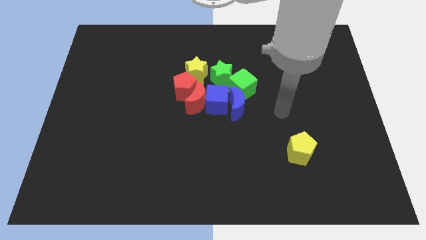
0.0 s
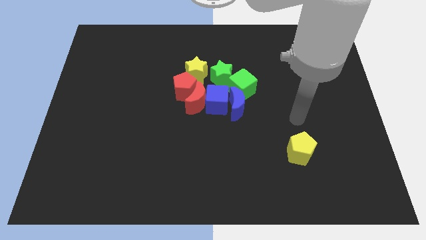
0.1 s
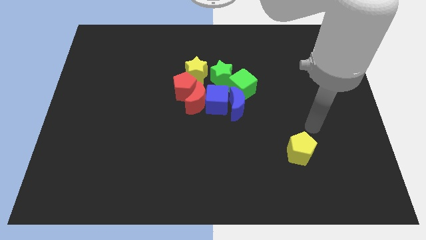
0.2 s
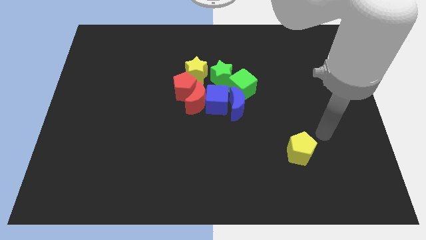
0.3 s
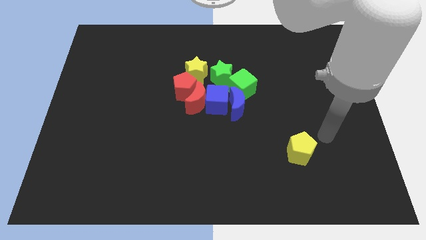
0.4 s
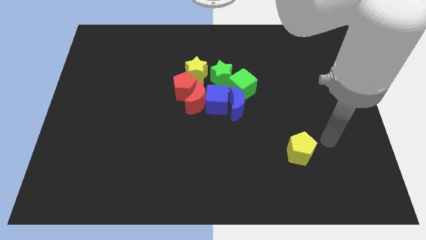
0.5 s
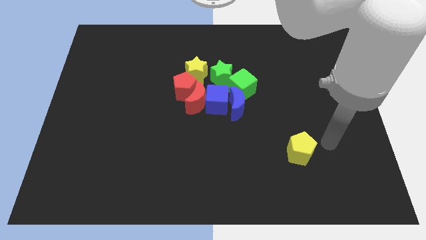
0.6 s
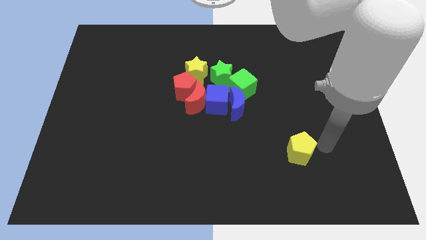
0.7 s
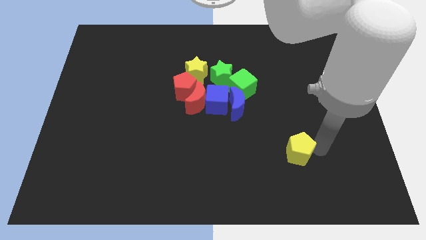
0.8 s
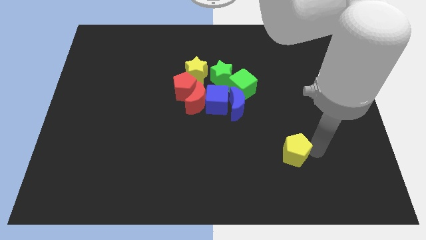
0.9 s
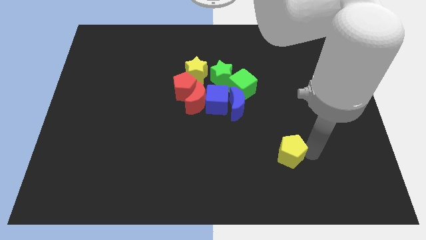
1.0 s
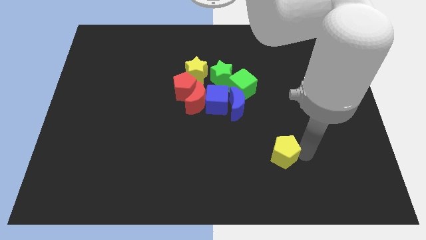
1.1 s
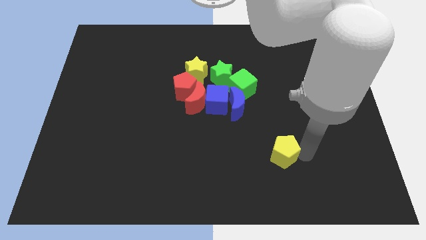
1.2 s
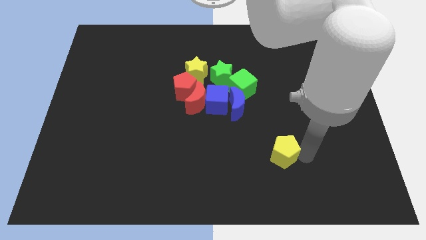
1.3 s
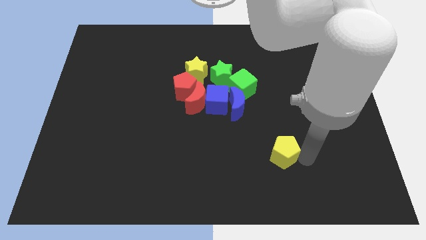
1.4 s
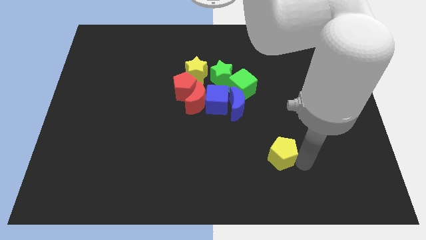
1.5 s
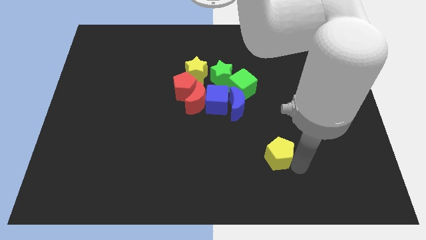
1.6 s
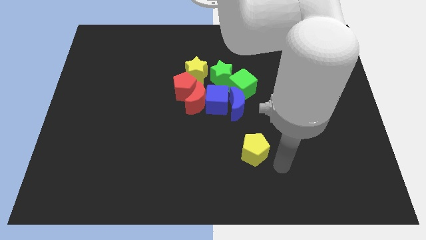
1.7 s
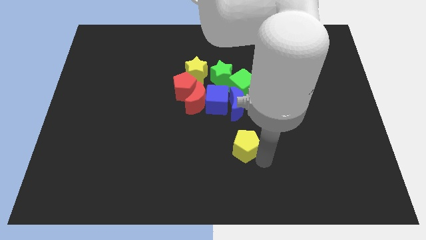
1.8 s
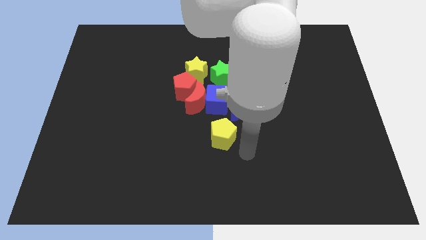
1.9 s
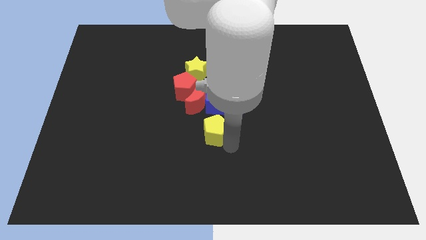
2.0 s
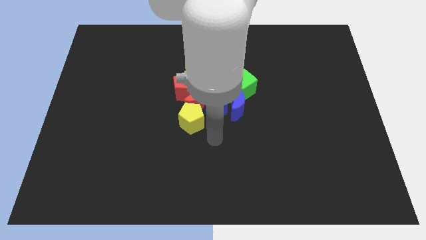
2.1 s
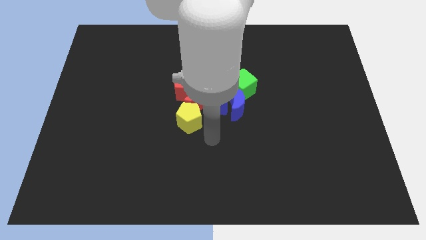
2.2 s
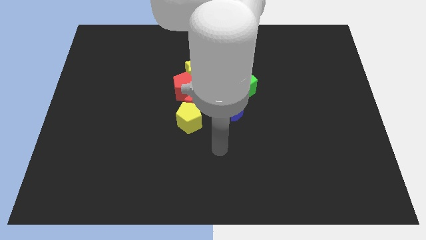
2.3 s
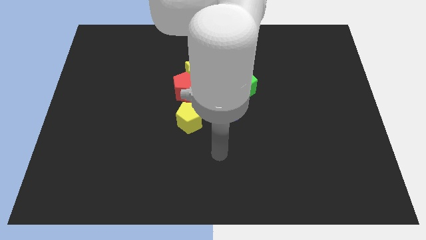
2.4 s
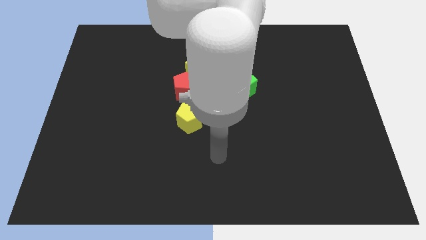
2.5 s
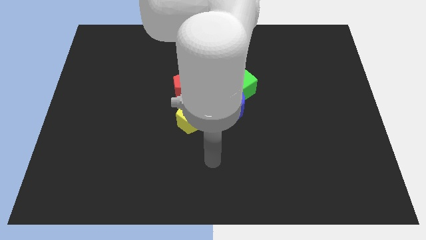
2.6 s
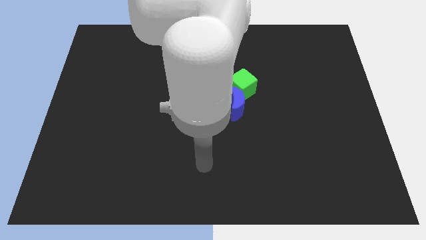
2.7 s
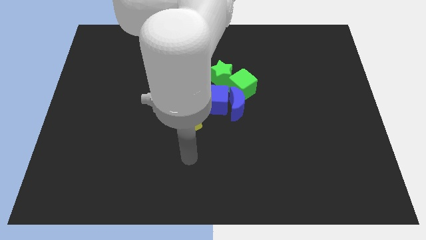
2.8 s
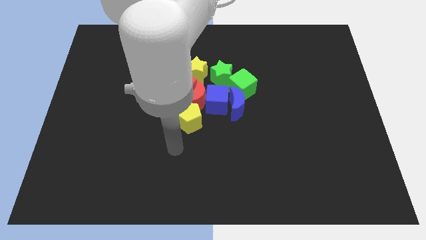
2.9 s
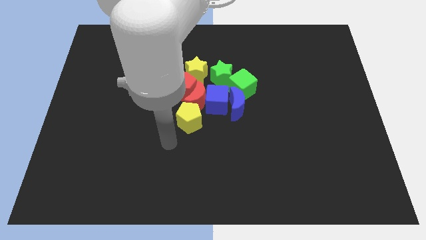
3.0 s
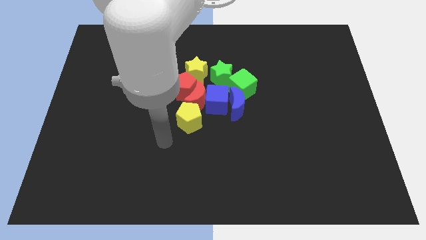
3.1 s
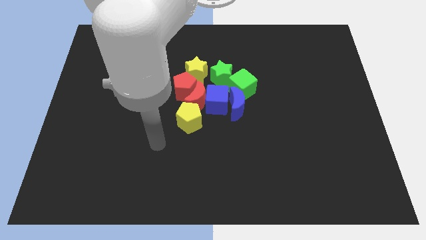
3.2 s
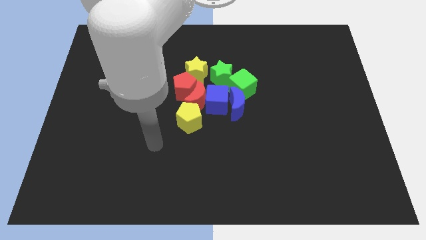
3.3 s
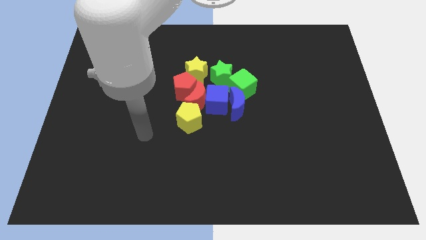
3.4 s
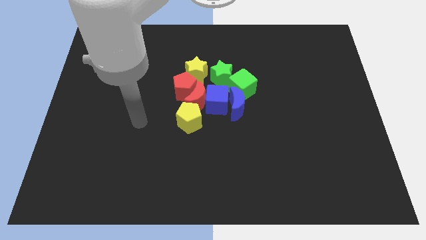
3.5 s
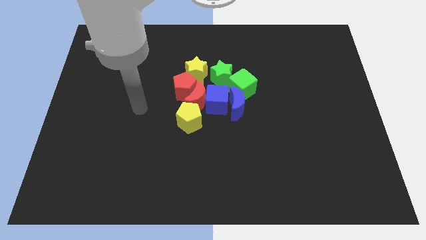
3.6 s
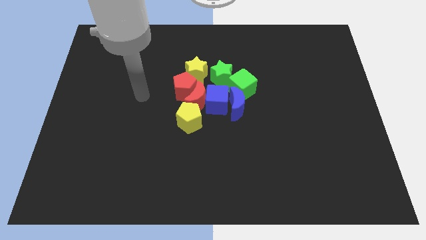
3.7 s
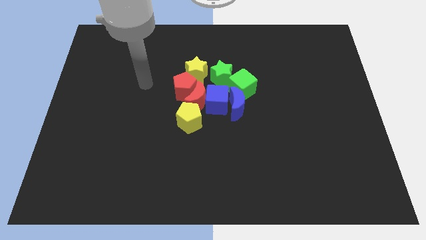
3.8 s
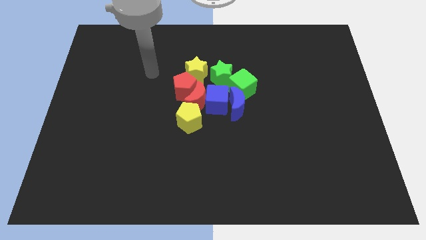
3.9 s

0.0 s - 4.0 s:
place the yellow pentagon to the bottom of red crescent

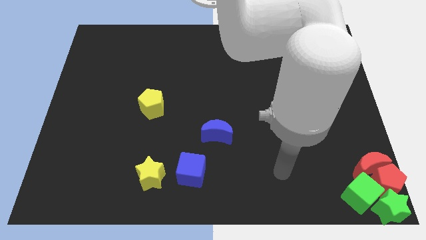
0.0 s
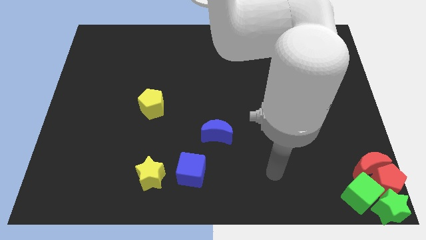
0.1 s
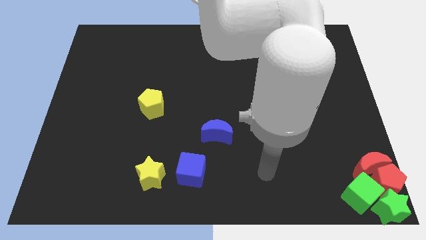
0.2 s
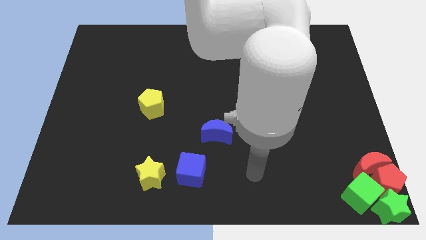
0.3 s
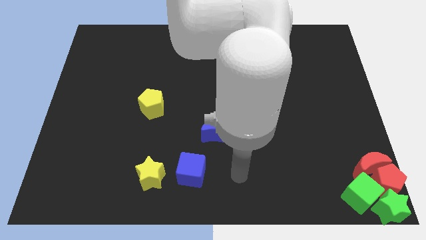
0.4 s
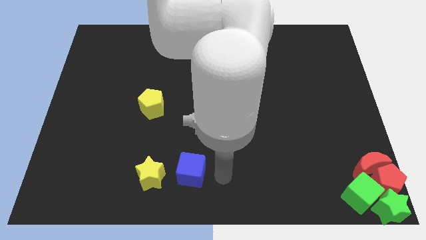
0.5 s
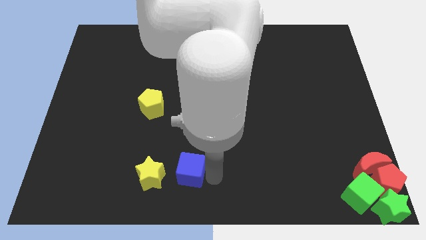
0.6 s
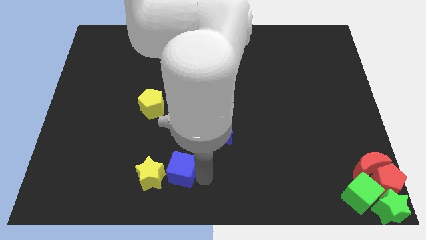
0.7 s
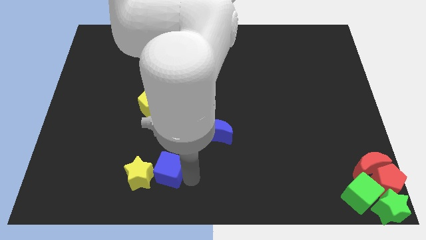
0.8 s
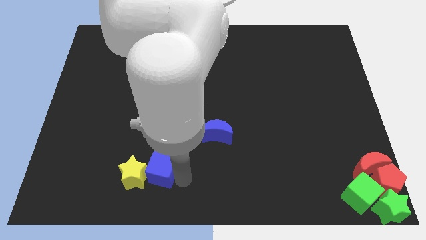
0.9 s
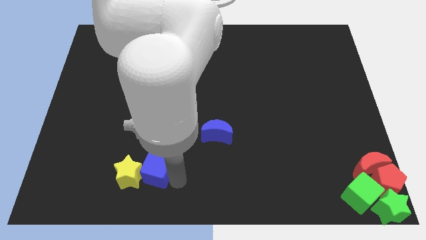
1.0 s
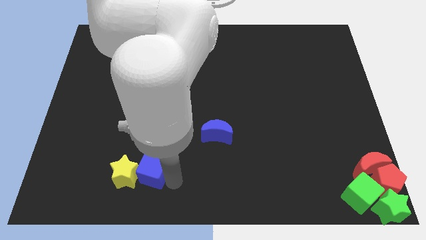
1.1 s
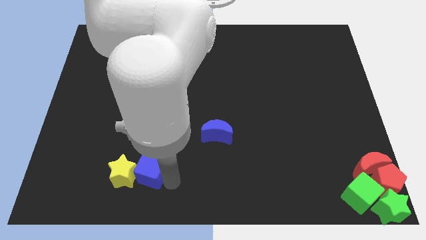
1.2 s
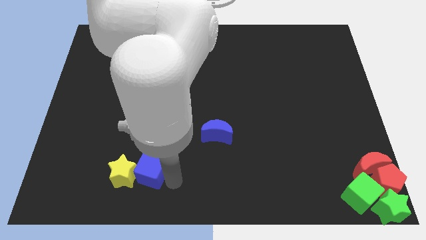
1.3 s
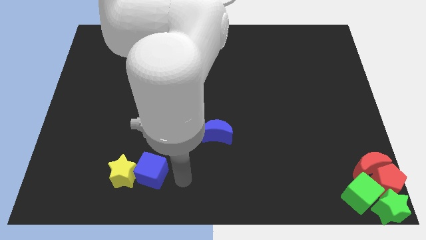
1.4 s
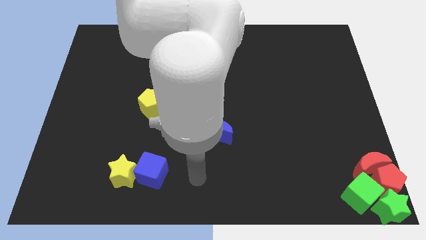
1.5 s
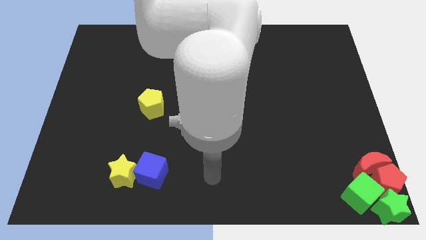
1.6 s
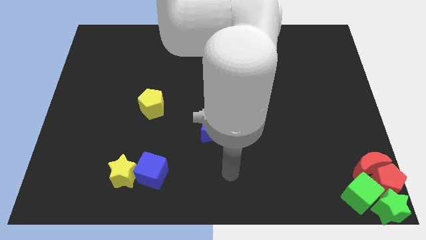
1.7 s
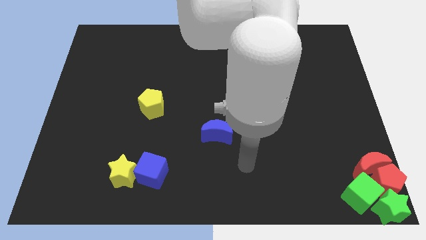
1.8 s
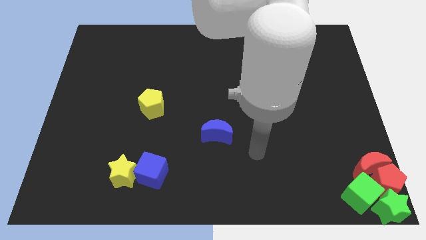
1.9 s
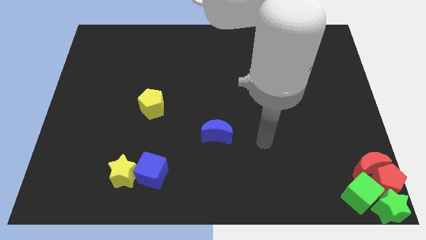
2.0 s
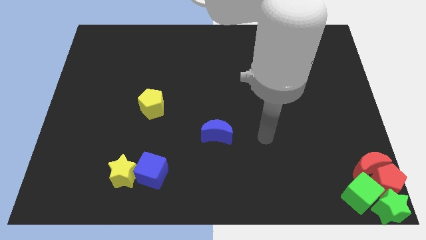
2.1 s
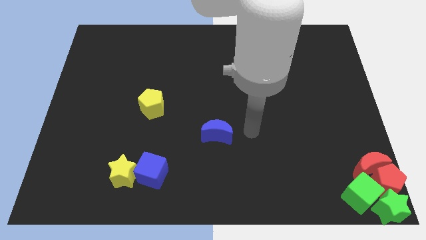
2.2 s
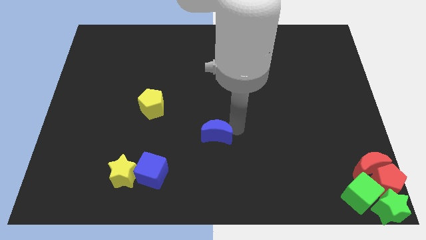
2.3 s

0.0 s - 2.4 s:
push the blue cube slightly left

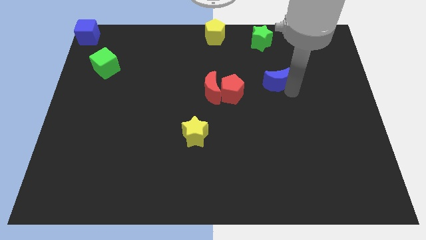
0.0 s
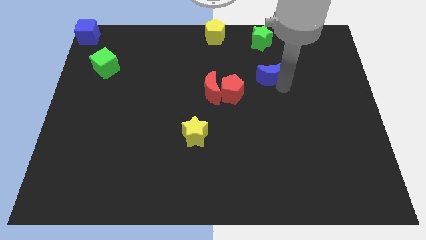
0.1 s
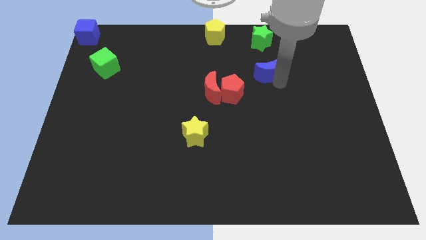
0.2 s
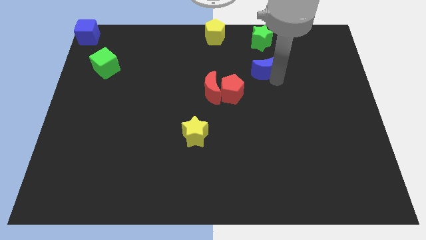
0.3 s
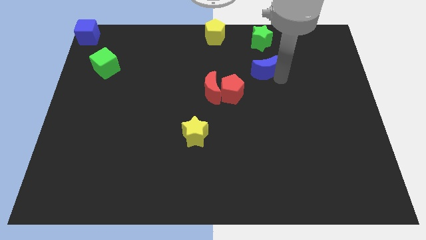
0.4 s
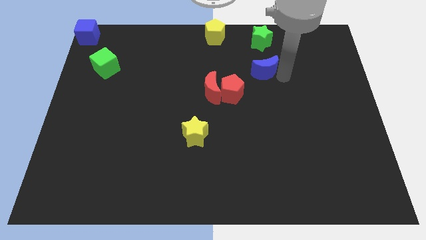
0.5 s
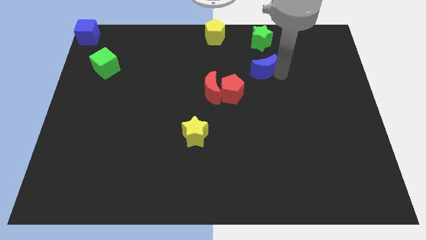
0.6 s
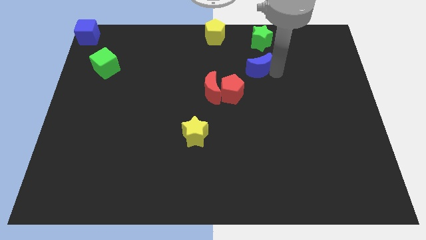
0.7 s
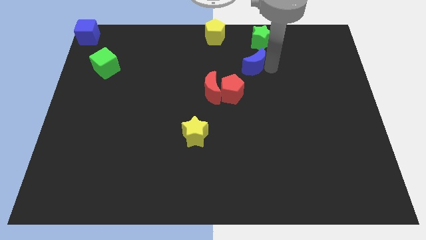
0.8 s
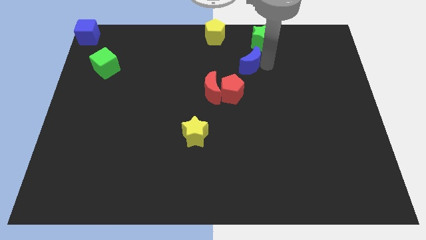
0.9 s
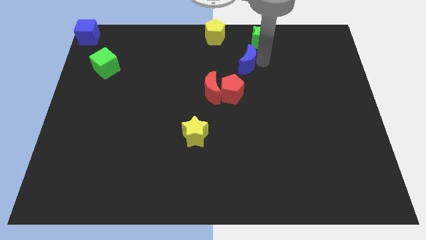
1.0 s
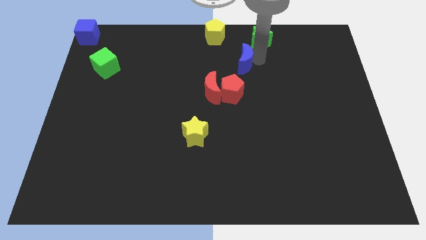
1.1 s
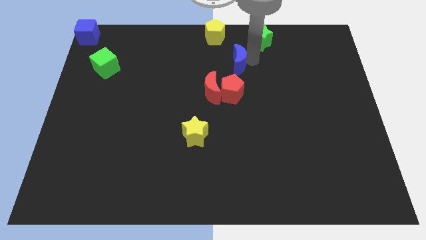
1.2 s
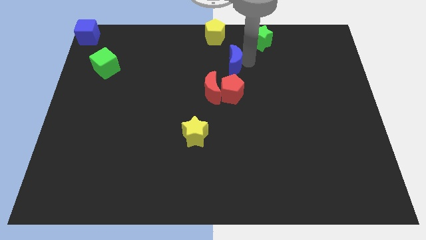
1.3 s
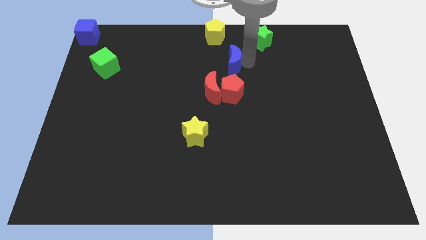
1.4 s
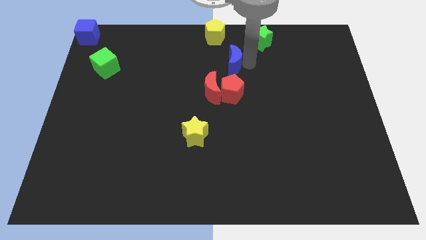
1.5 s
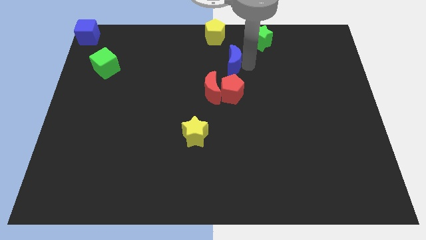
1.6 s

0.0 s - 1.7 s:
move the blue crescent to the top of the red pentagon

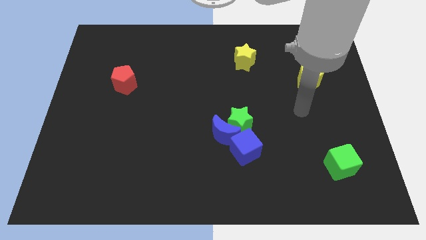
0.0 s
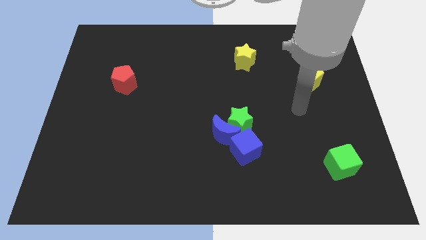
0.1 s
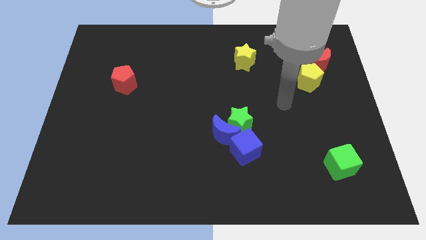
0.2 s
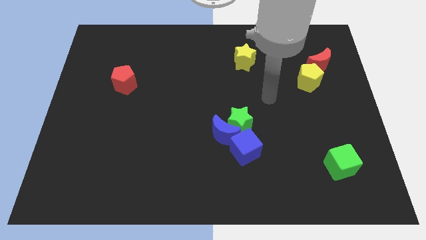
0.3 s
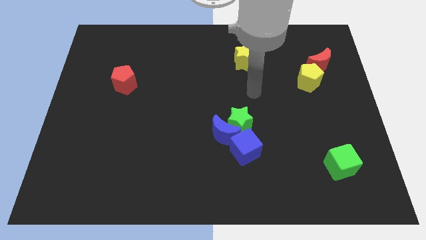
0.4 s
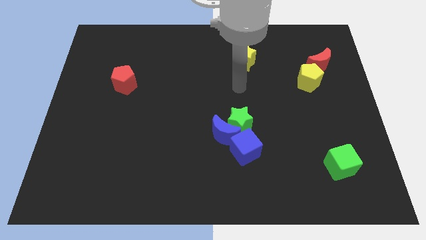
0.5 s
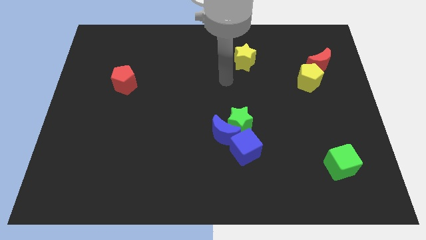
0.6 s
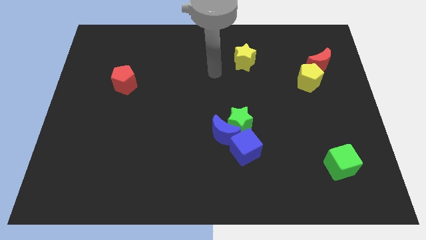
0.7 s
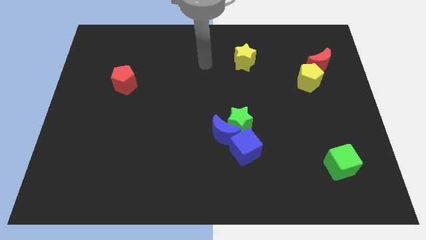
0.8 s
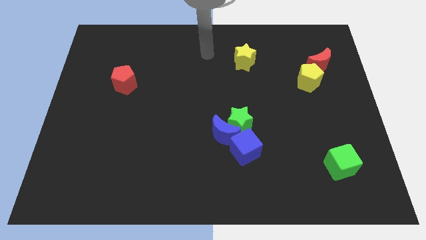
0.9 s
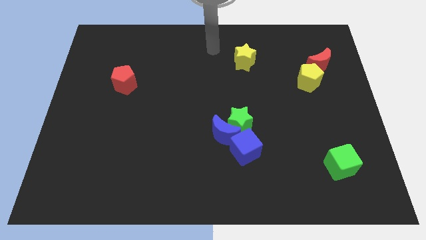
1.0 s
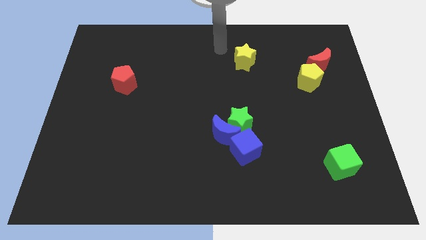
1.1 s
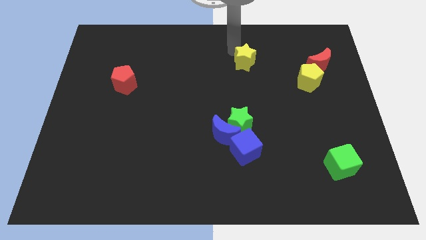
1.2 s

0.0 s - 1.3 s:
move your arm towards the yellow star
